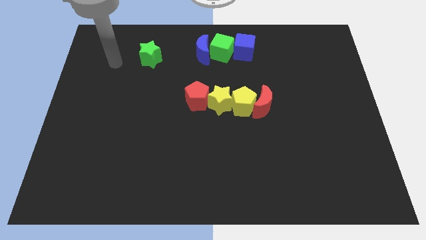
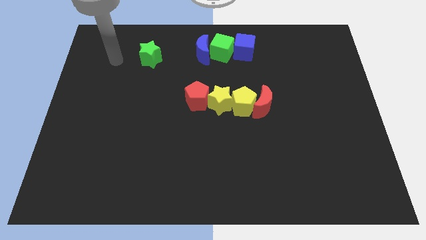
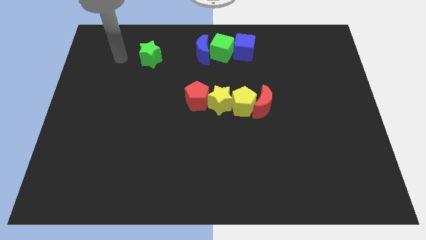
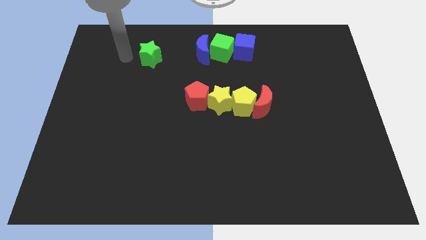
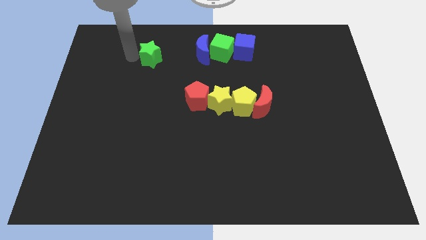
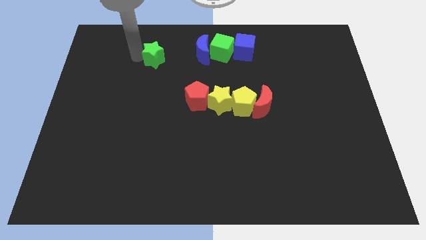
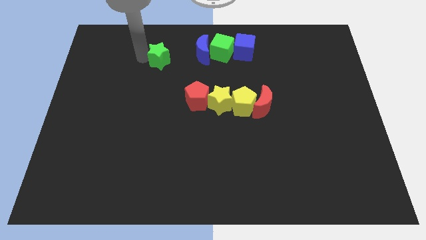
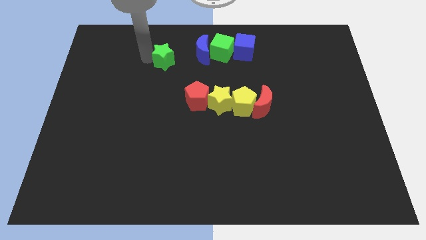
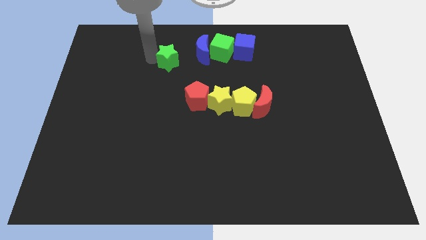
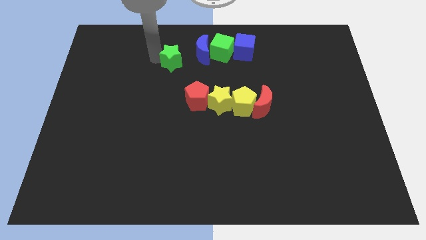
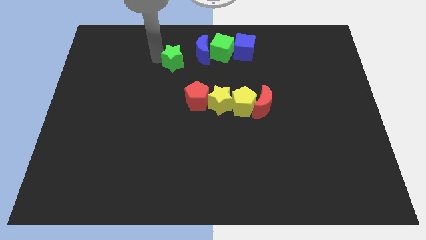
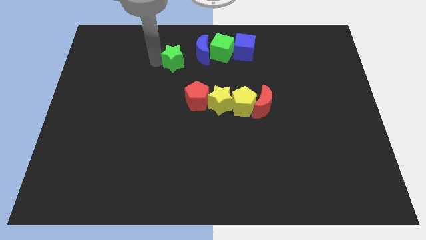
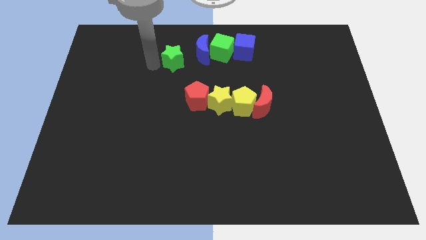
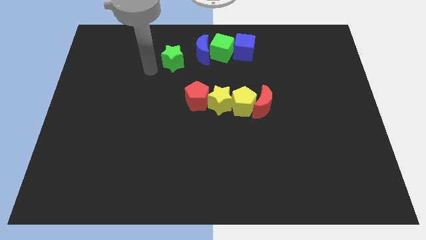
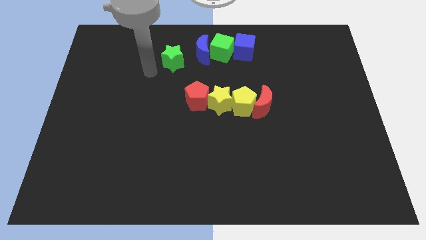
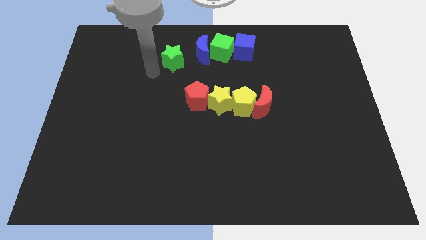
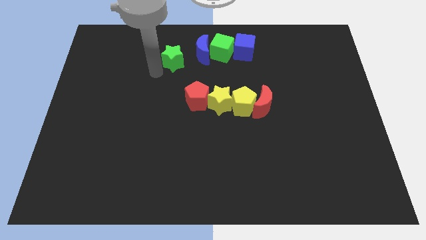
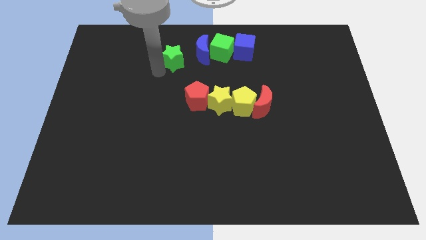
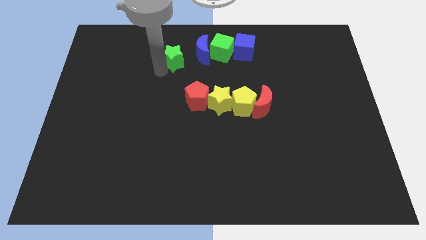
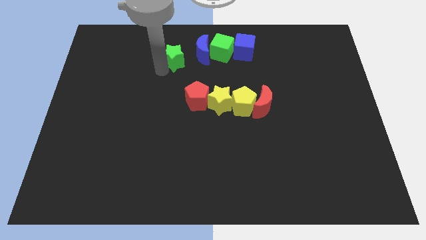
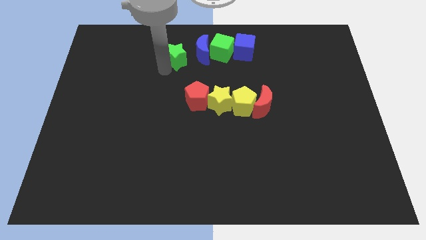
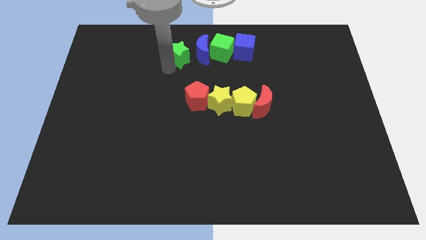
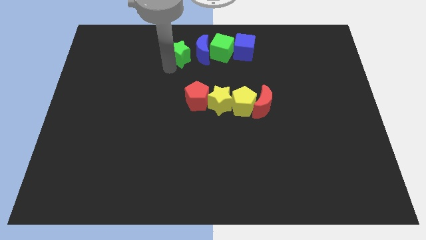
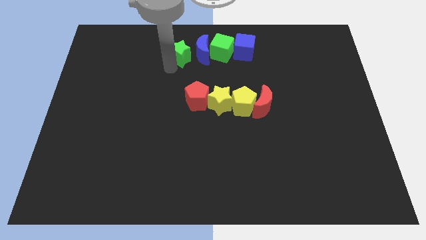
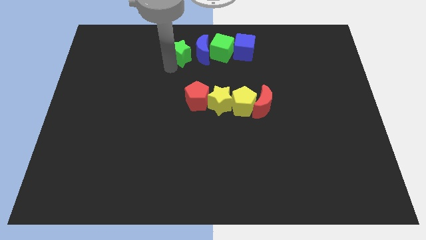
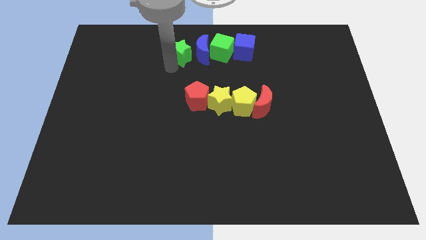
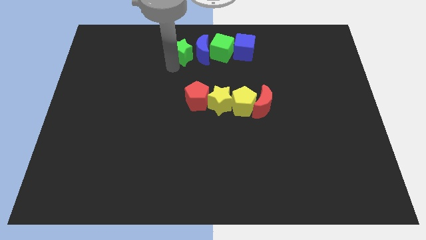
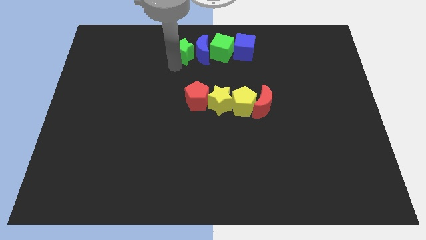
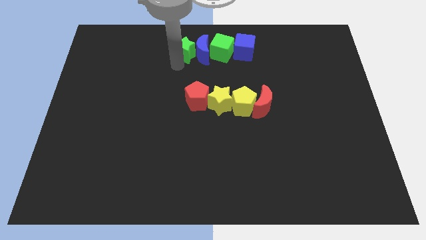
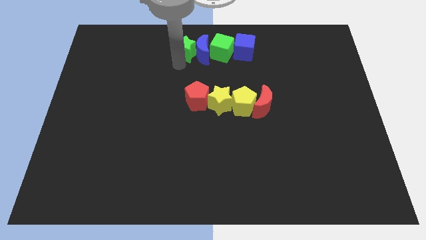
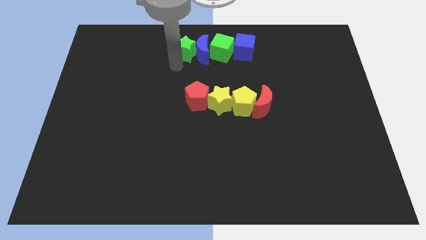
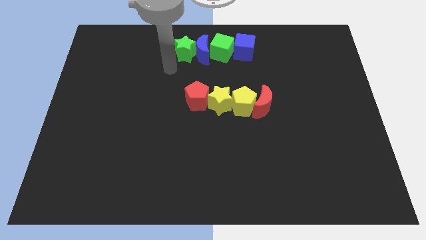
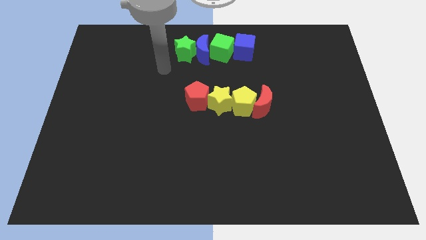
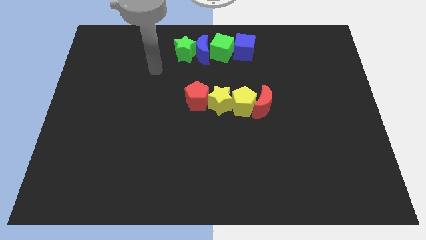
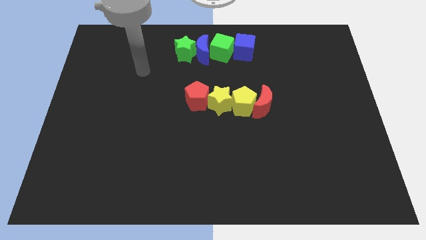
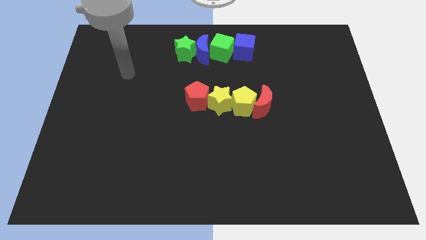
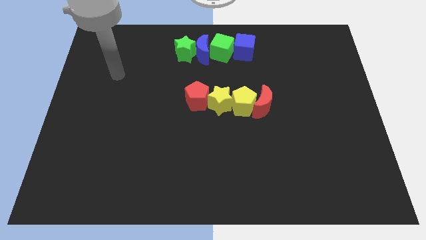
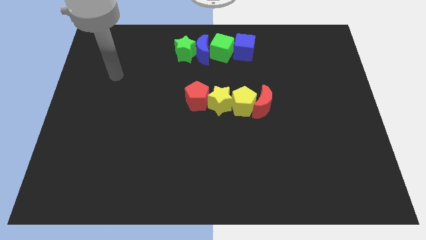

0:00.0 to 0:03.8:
place the green star diagonally to the yellow star

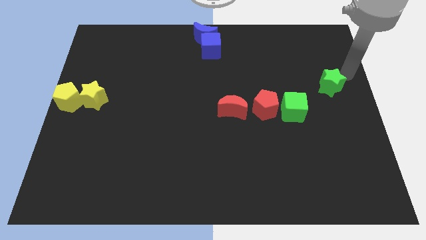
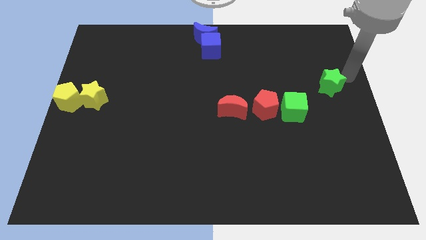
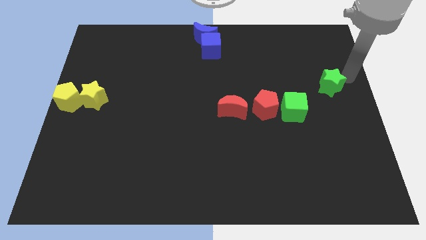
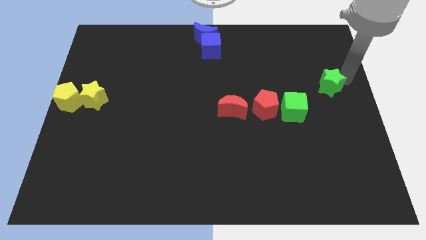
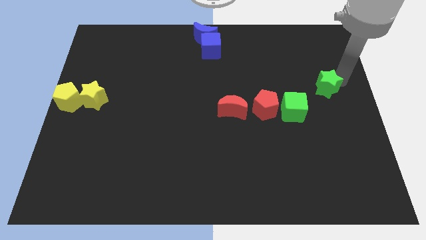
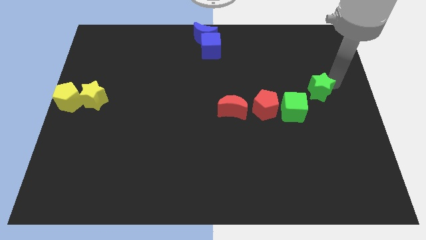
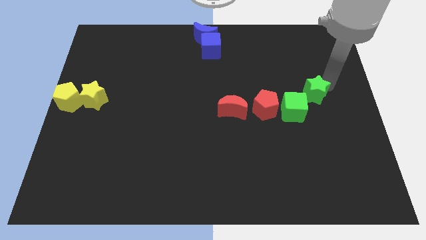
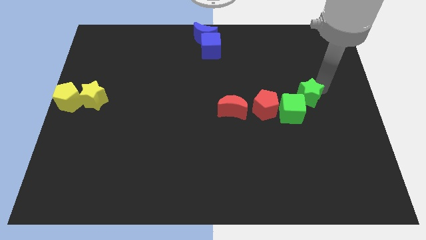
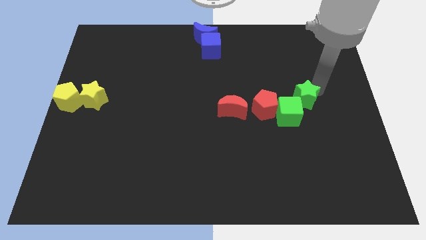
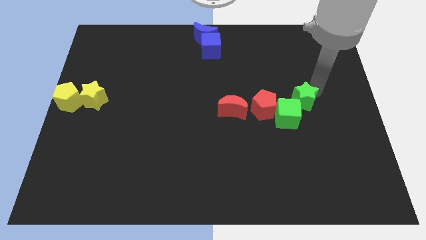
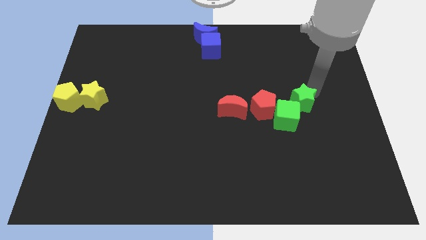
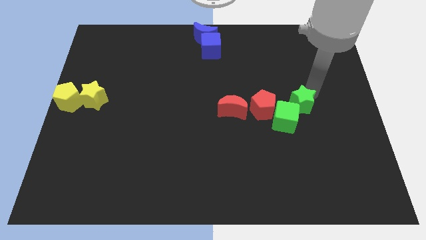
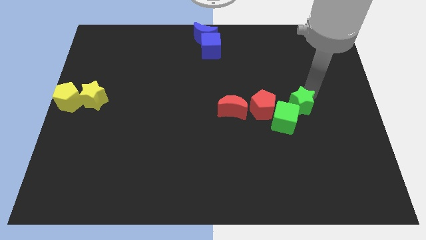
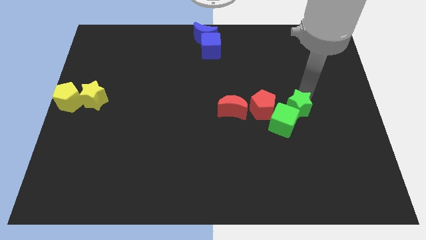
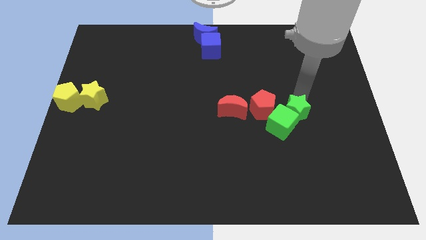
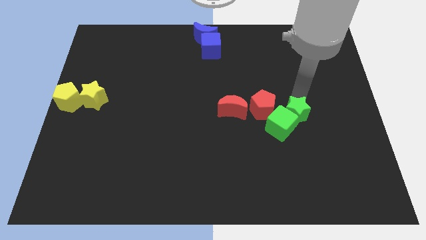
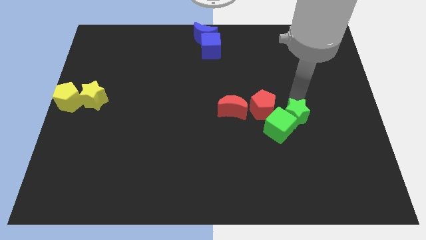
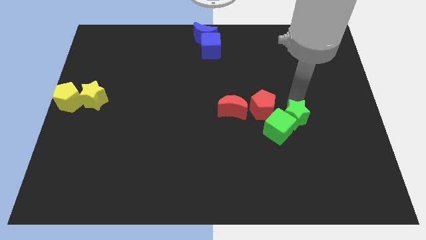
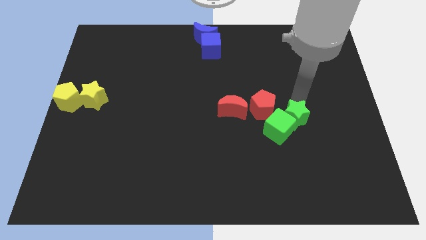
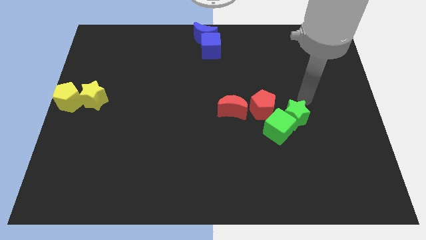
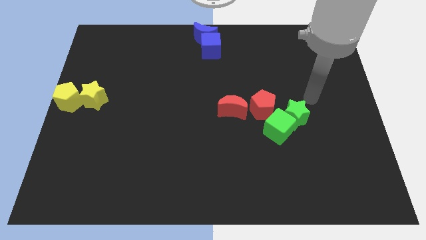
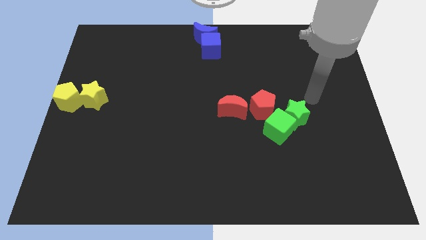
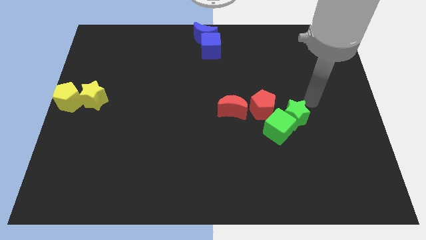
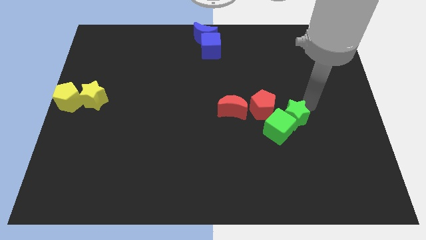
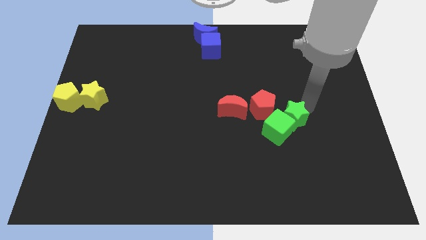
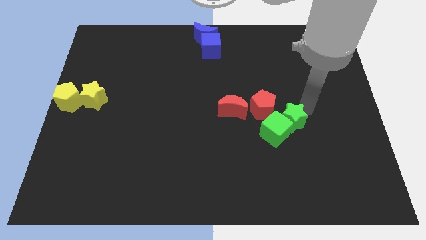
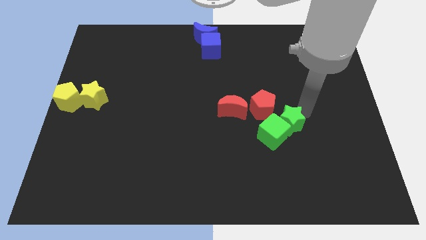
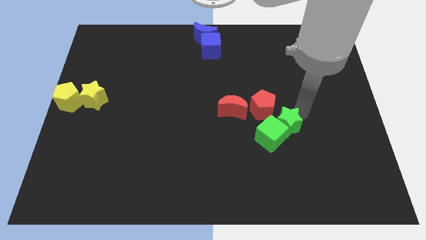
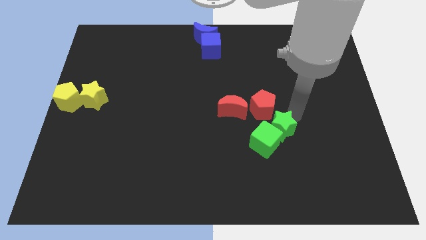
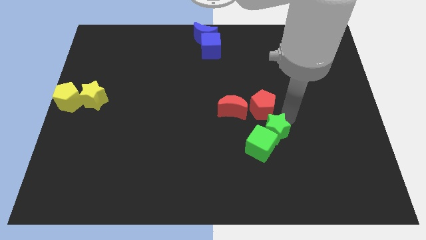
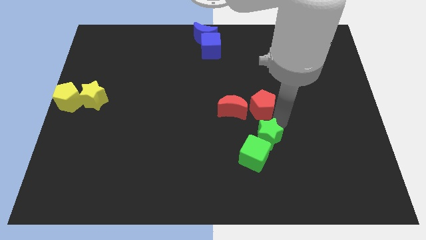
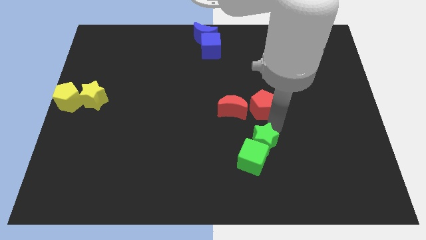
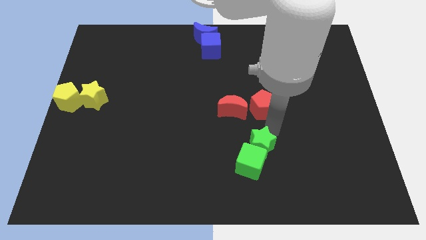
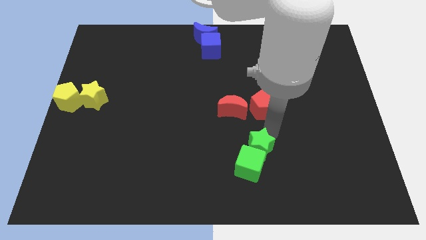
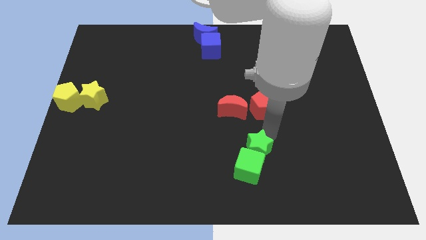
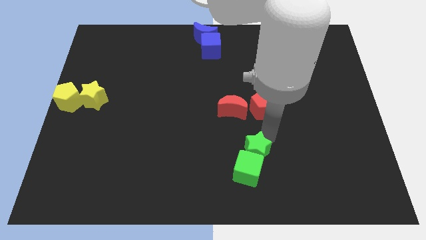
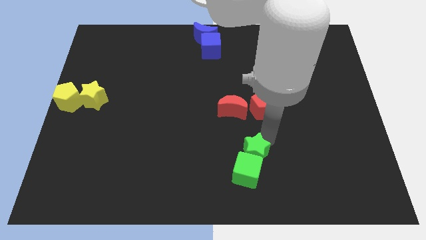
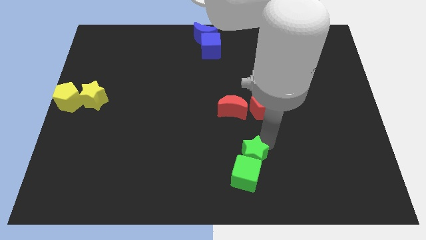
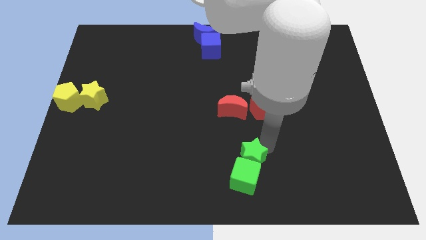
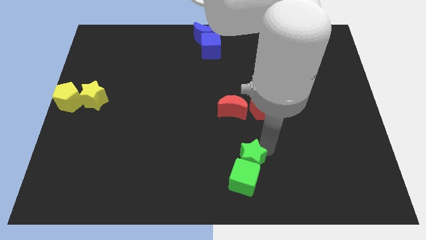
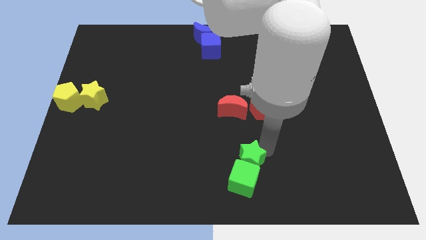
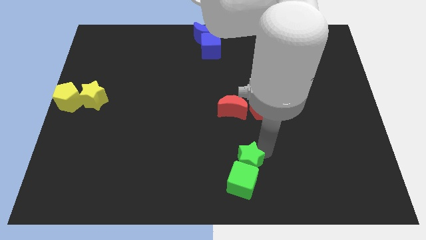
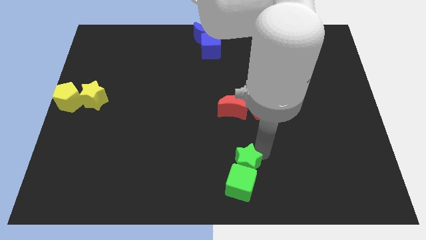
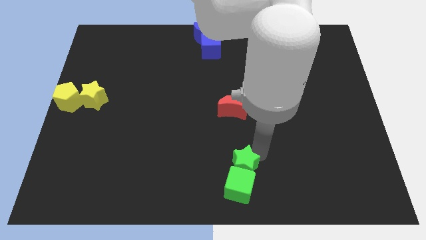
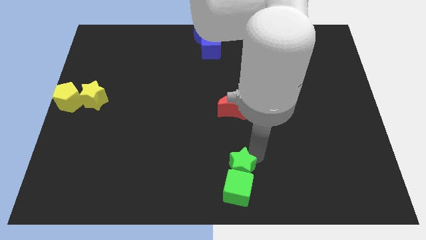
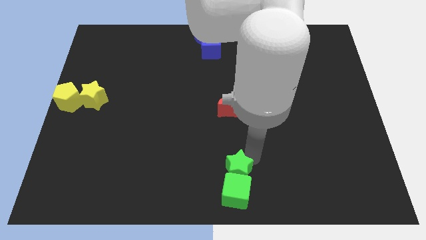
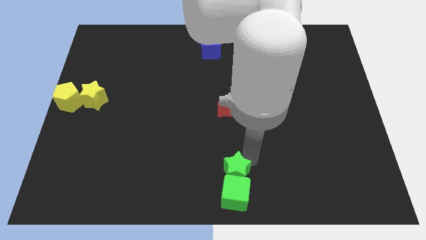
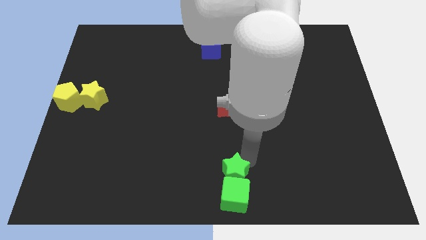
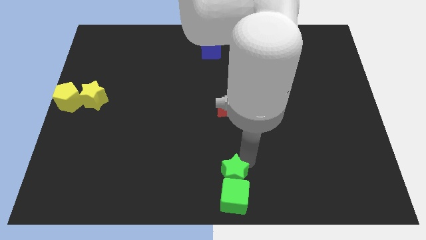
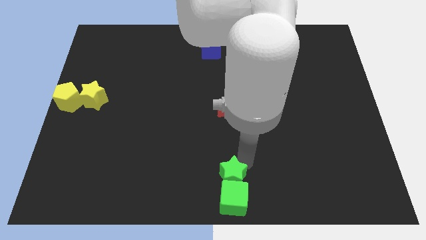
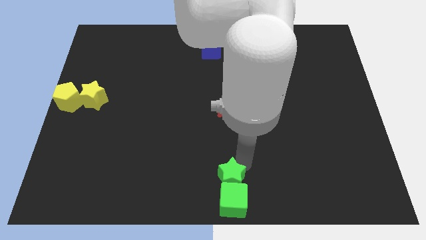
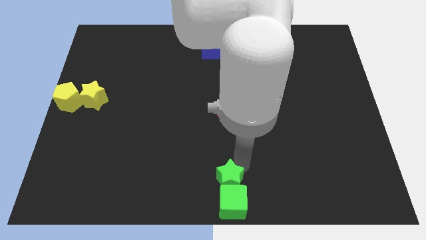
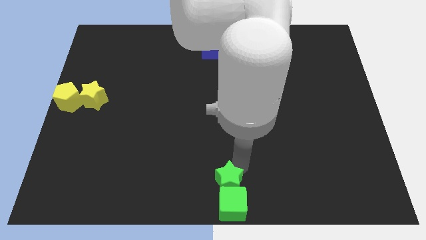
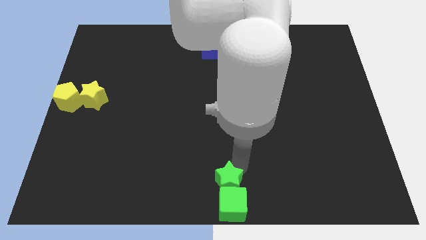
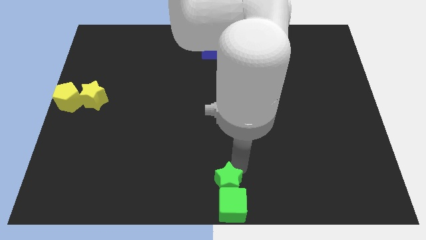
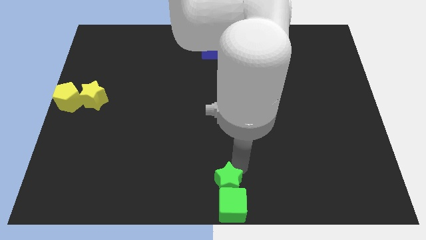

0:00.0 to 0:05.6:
drag the green blocks at the bottom center
